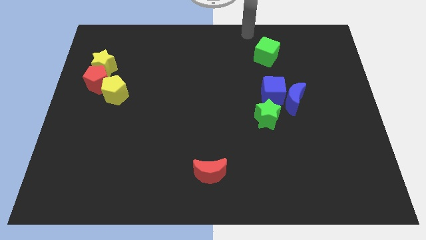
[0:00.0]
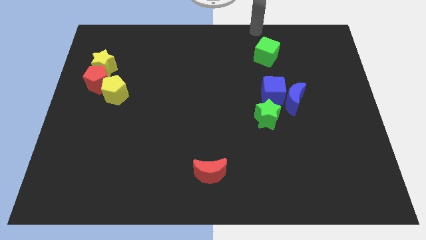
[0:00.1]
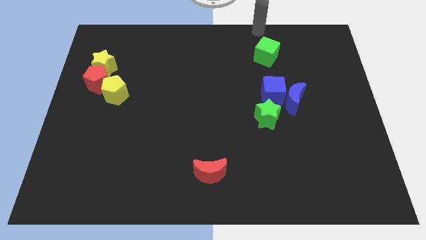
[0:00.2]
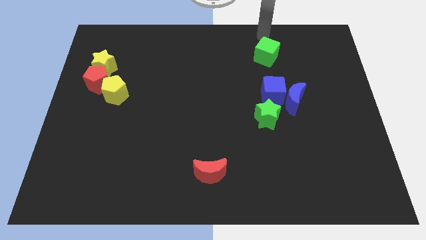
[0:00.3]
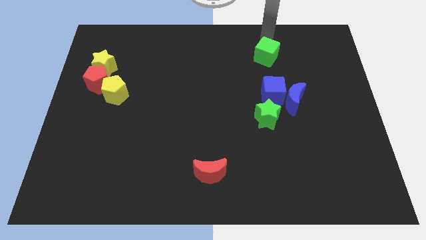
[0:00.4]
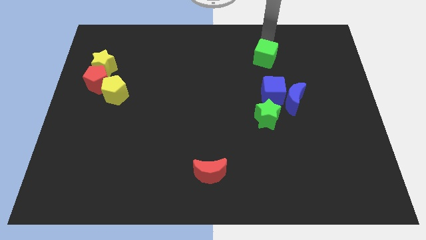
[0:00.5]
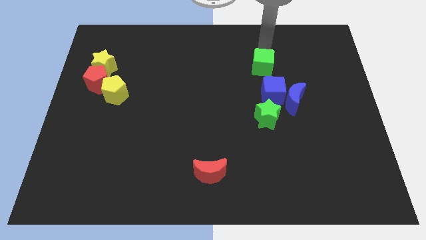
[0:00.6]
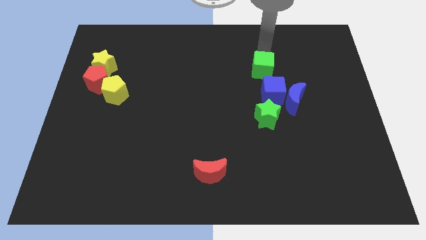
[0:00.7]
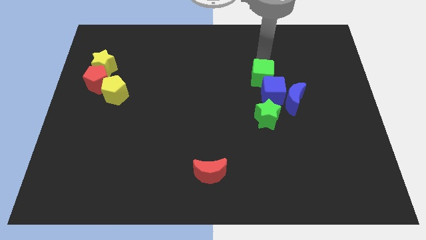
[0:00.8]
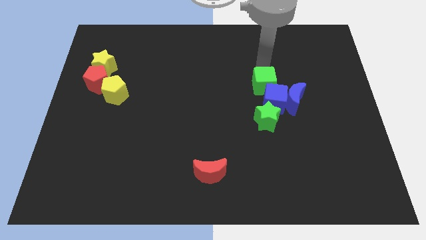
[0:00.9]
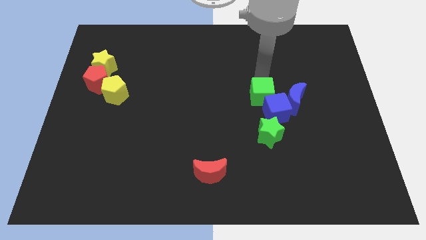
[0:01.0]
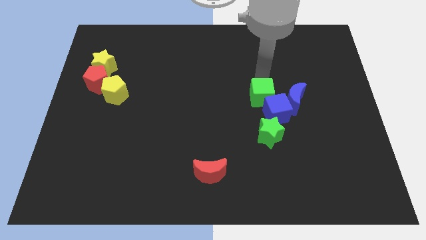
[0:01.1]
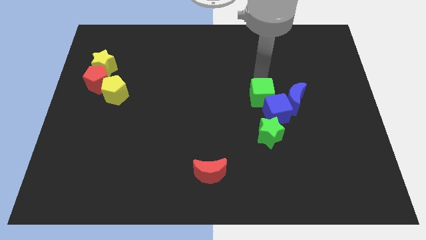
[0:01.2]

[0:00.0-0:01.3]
push blue cube with green cube

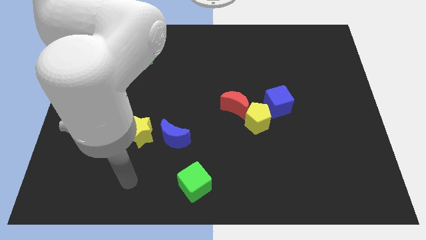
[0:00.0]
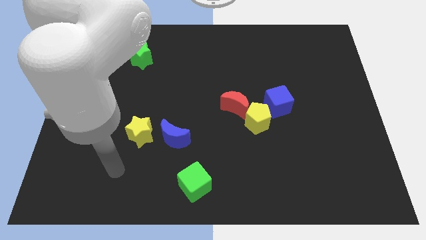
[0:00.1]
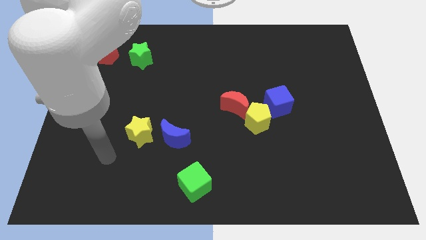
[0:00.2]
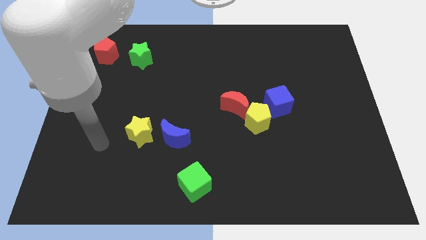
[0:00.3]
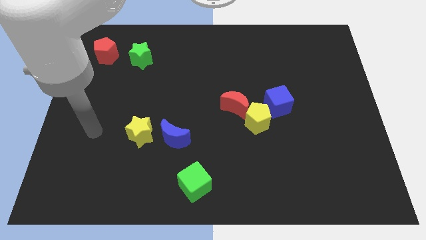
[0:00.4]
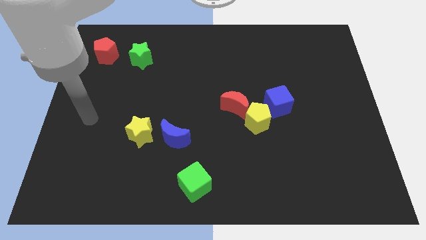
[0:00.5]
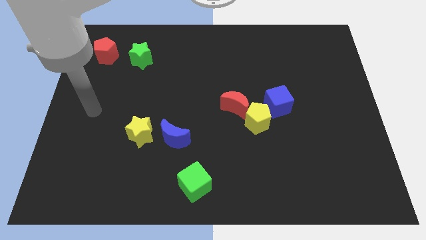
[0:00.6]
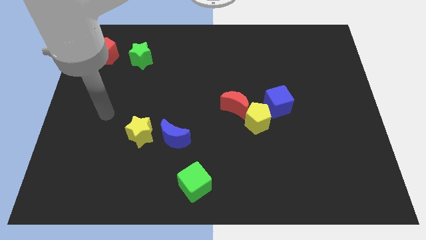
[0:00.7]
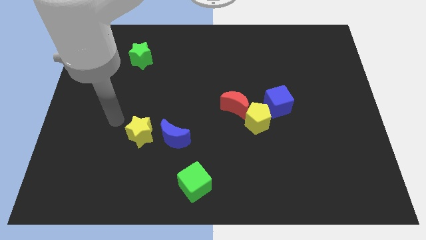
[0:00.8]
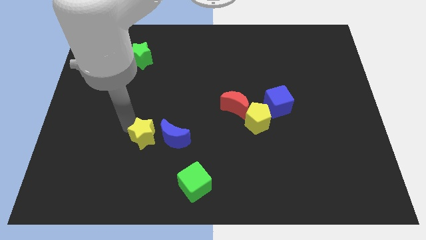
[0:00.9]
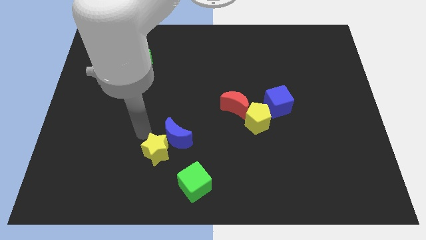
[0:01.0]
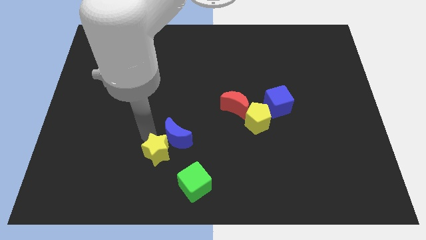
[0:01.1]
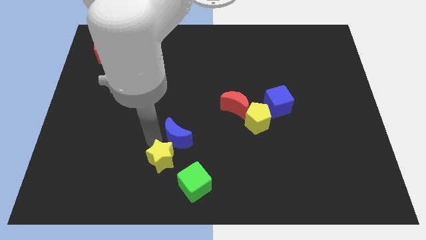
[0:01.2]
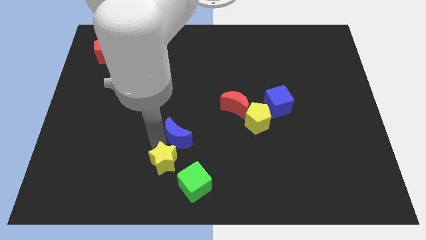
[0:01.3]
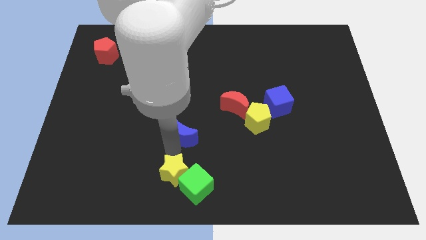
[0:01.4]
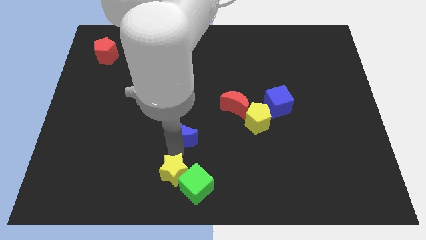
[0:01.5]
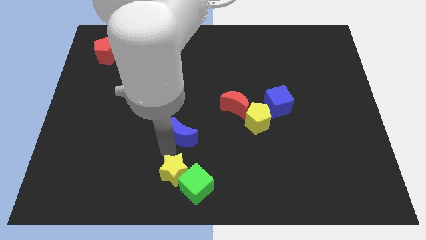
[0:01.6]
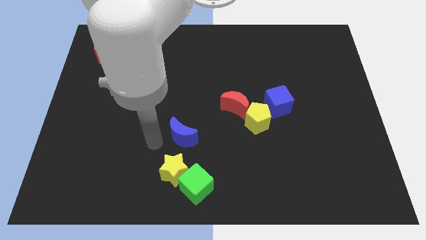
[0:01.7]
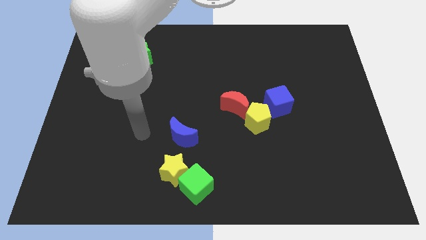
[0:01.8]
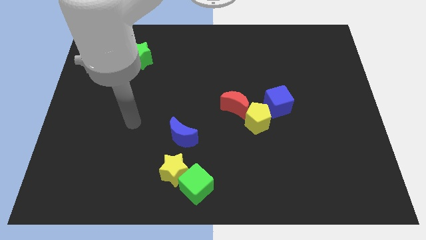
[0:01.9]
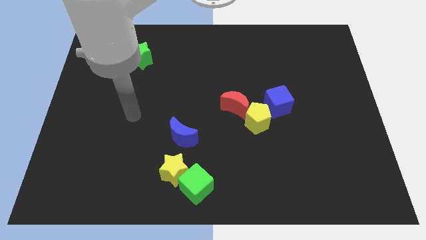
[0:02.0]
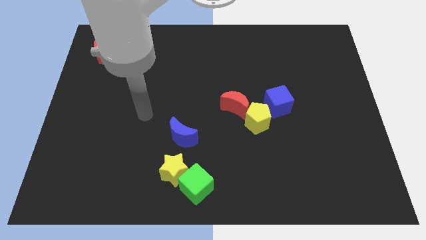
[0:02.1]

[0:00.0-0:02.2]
push yellow star to bottom of the board

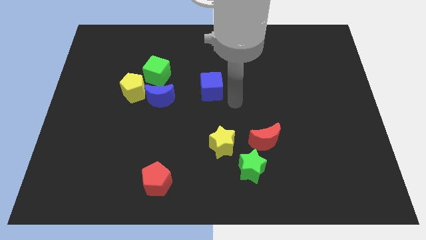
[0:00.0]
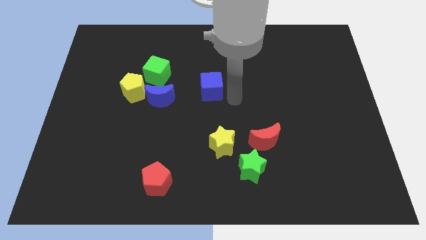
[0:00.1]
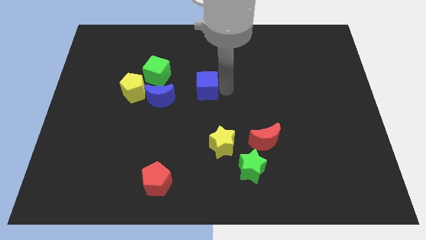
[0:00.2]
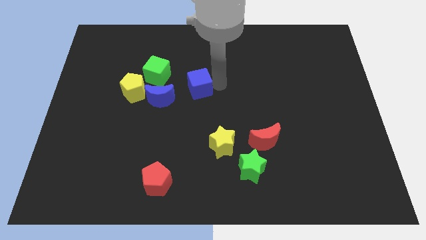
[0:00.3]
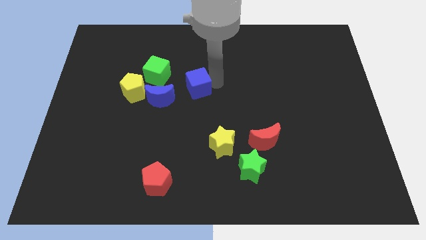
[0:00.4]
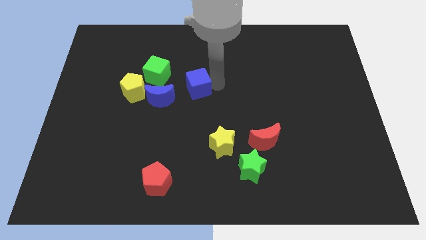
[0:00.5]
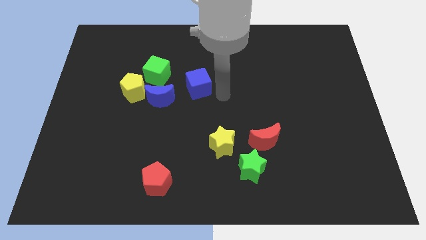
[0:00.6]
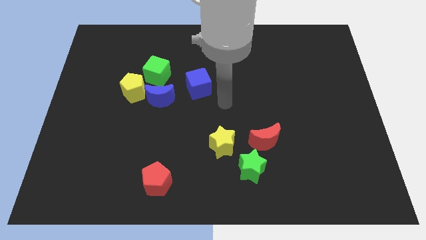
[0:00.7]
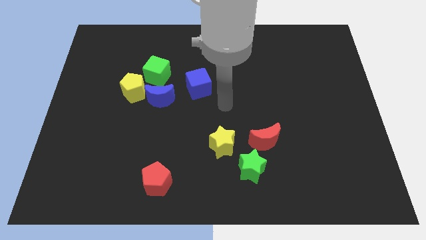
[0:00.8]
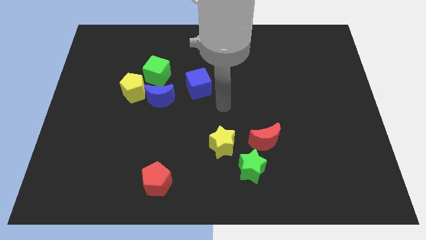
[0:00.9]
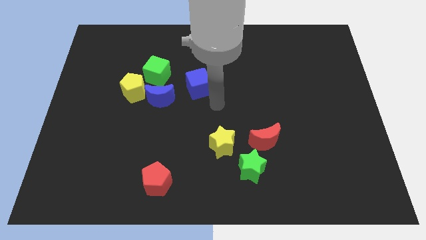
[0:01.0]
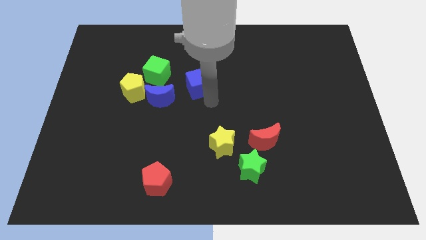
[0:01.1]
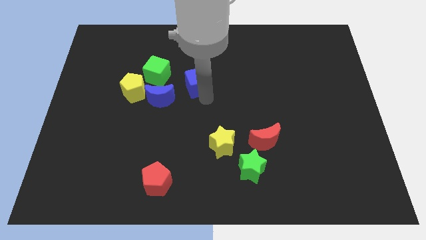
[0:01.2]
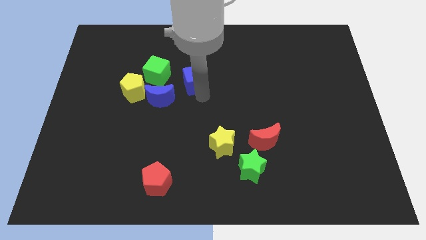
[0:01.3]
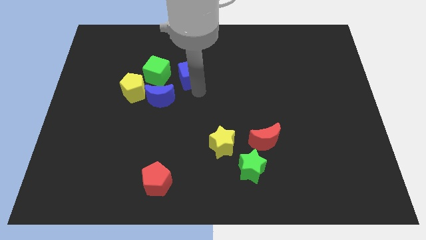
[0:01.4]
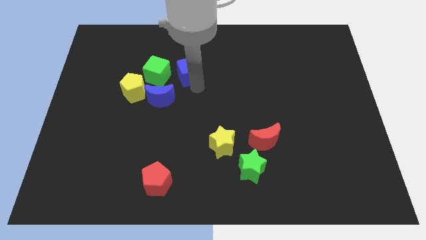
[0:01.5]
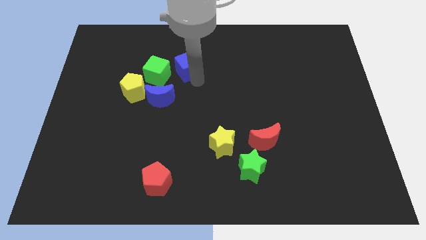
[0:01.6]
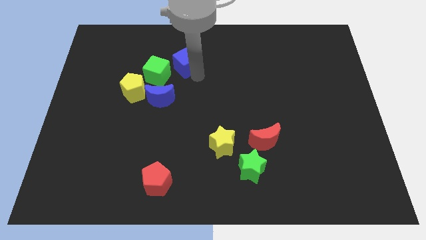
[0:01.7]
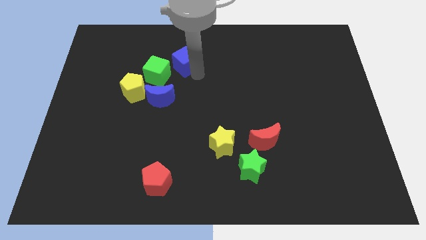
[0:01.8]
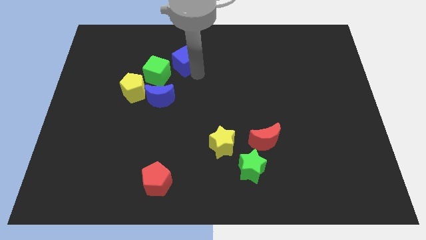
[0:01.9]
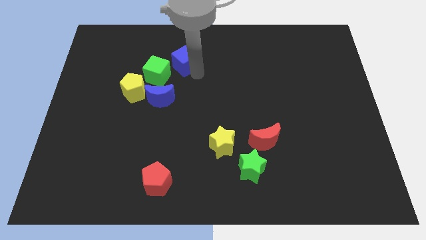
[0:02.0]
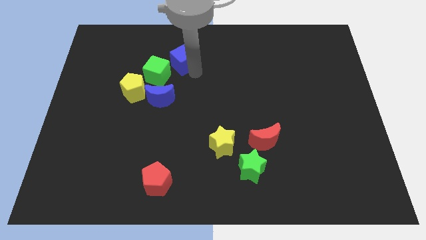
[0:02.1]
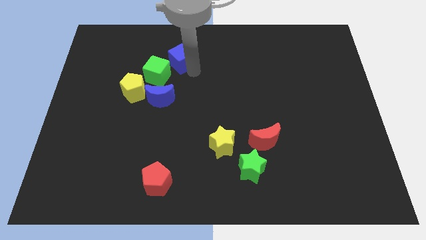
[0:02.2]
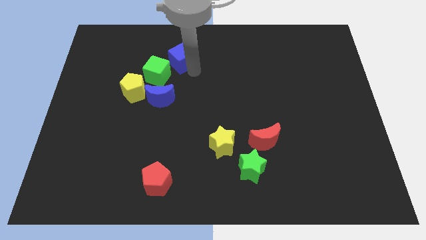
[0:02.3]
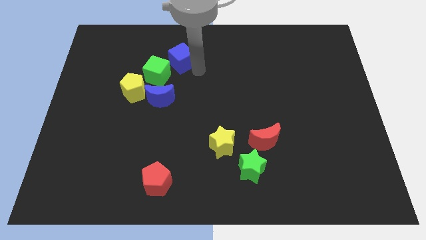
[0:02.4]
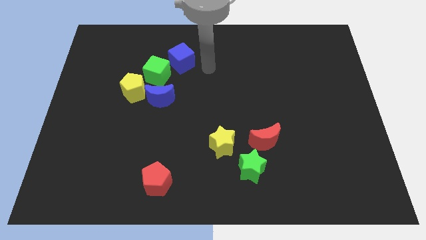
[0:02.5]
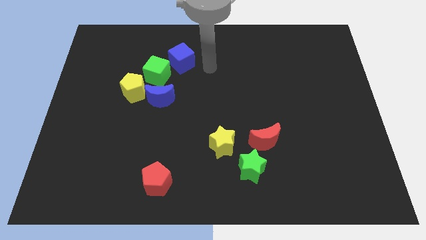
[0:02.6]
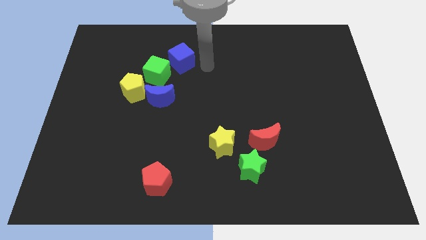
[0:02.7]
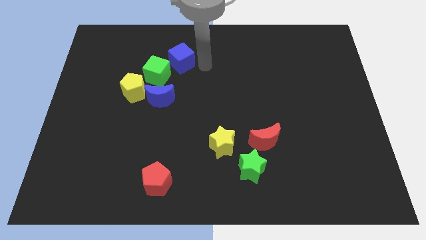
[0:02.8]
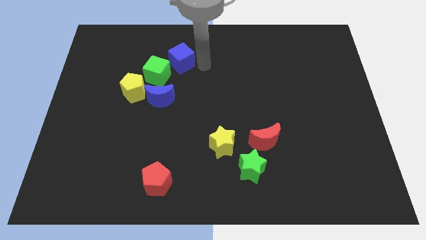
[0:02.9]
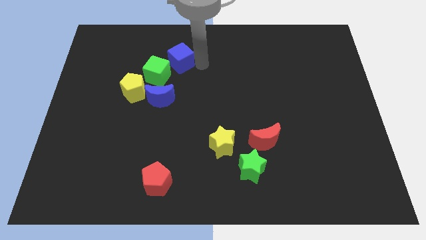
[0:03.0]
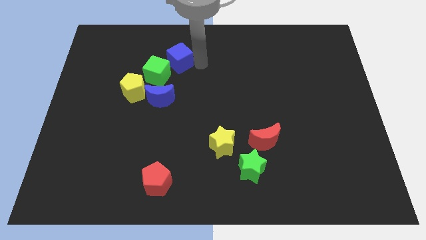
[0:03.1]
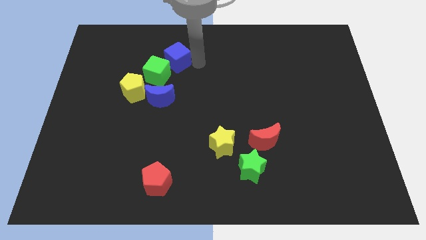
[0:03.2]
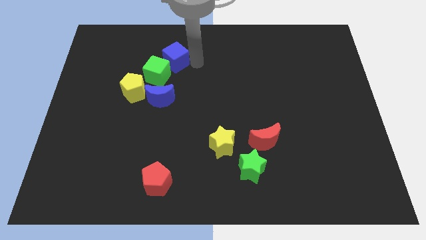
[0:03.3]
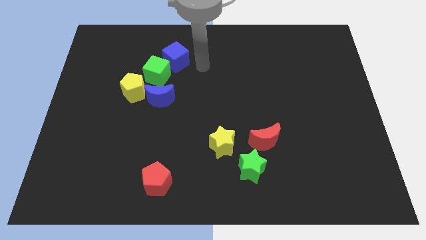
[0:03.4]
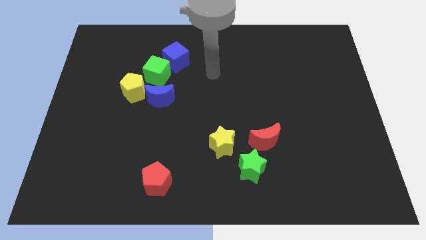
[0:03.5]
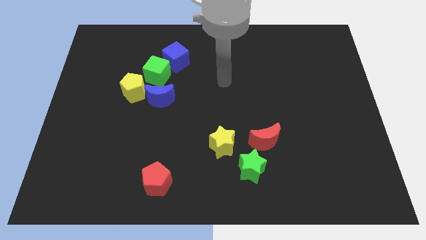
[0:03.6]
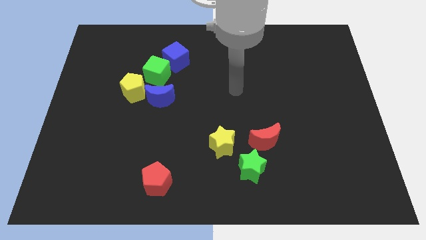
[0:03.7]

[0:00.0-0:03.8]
push the blue cube to the top right of the green cube

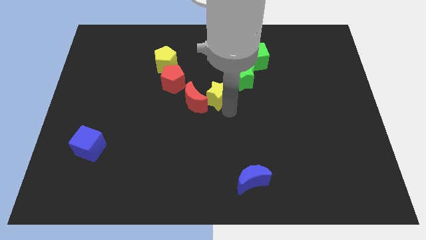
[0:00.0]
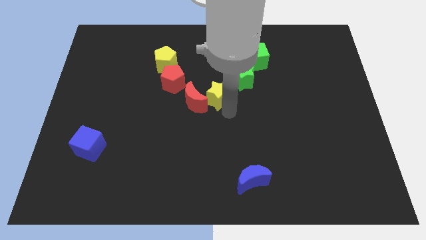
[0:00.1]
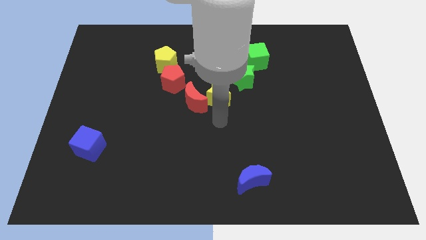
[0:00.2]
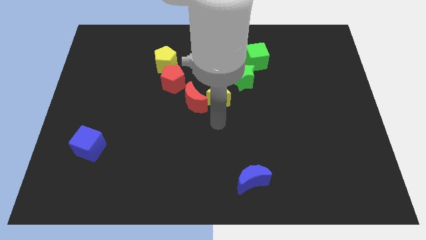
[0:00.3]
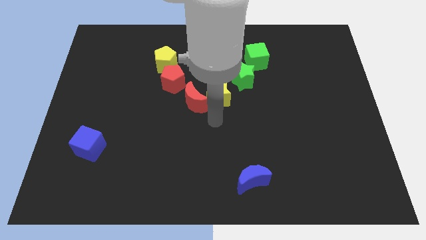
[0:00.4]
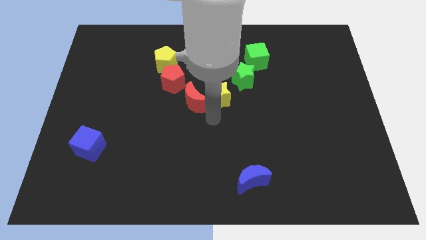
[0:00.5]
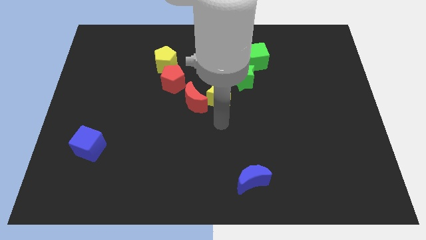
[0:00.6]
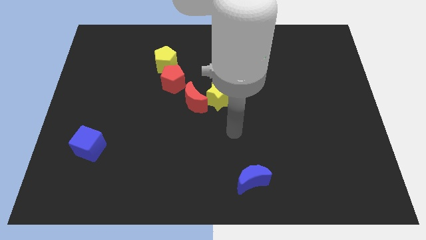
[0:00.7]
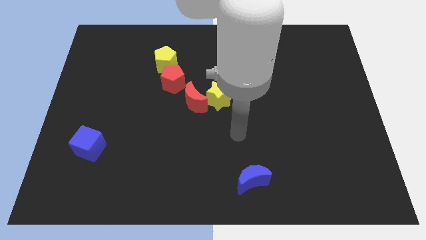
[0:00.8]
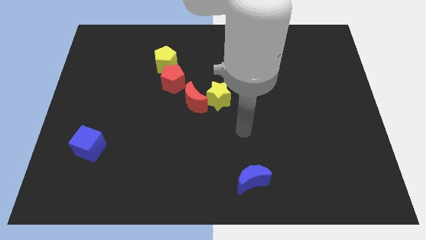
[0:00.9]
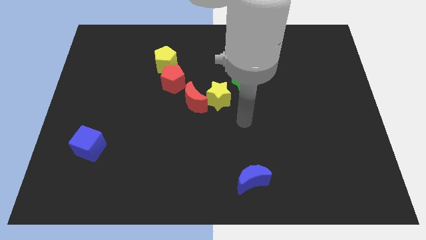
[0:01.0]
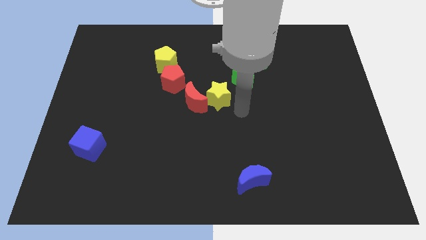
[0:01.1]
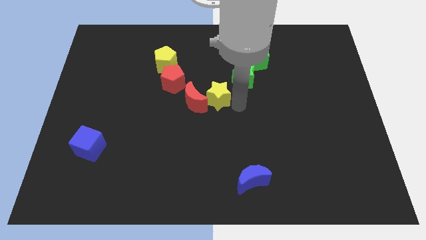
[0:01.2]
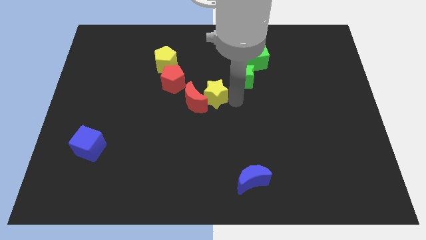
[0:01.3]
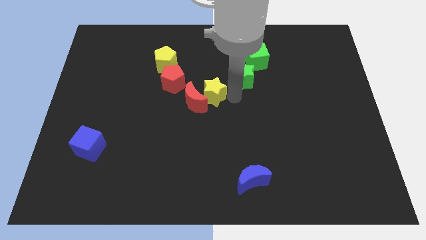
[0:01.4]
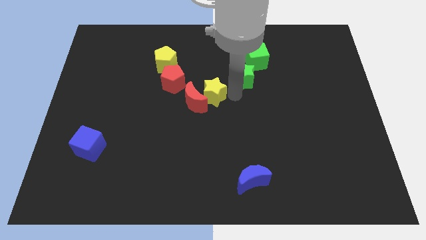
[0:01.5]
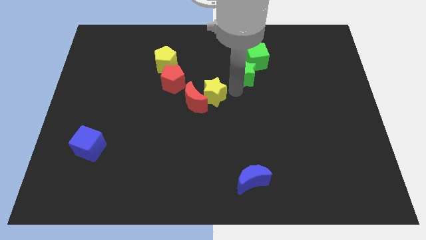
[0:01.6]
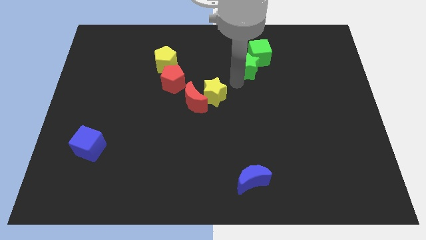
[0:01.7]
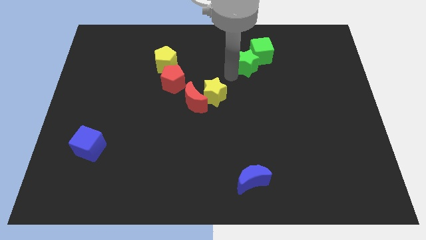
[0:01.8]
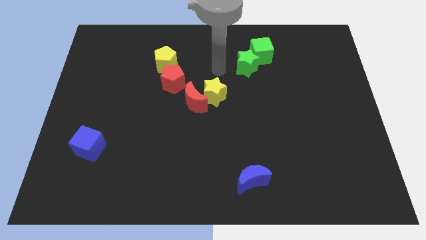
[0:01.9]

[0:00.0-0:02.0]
separate the gree and yellow star
